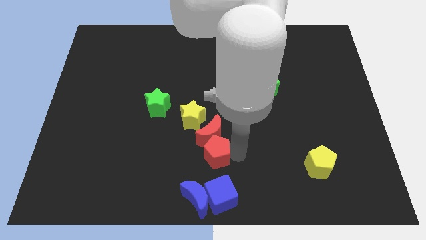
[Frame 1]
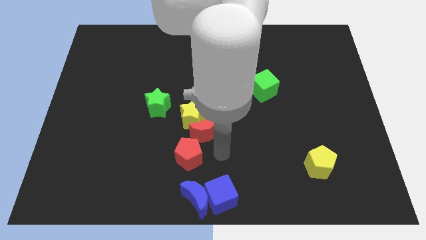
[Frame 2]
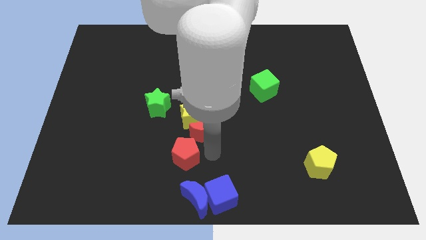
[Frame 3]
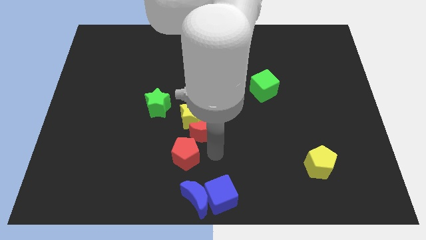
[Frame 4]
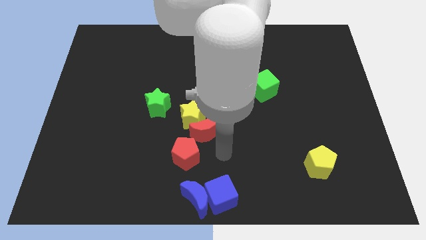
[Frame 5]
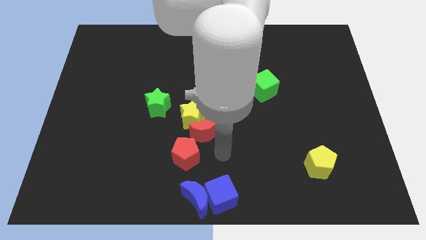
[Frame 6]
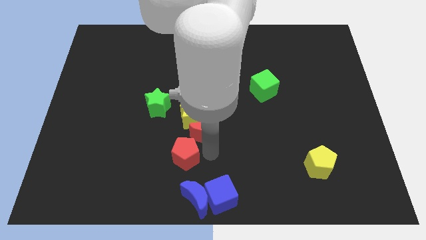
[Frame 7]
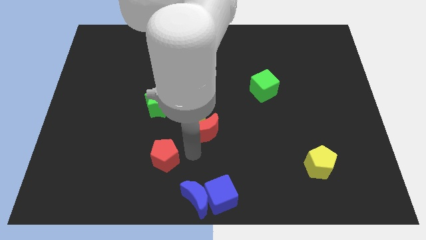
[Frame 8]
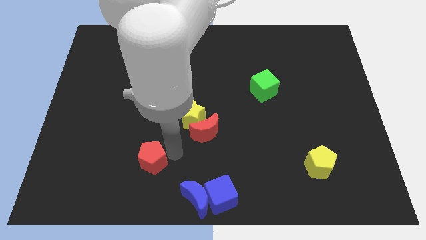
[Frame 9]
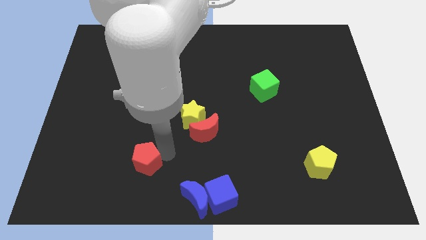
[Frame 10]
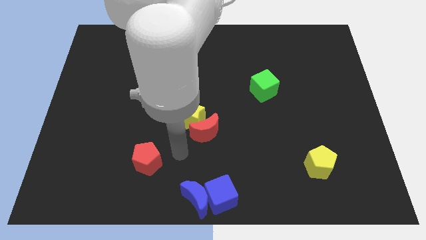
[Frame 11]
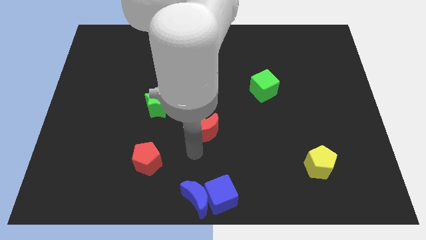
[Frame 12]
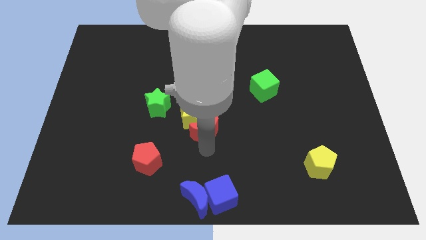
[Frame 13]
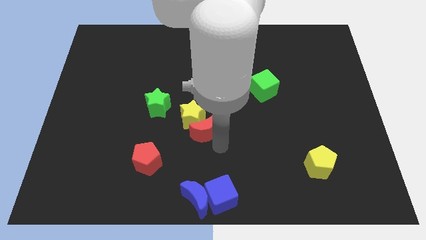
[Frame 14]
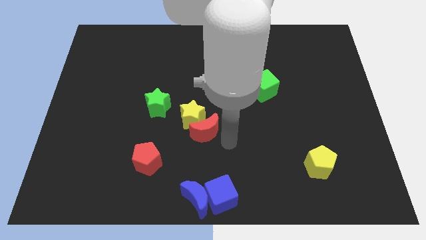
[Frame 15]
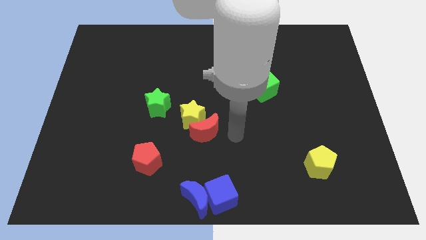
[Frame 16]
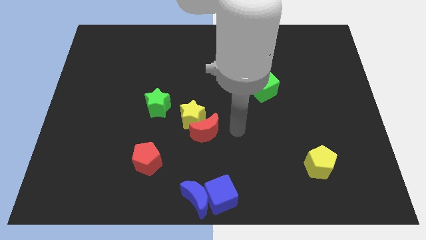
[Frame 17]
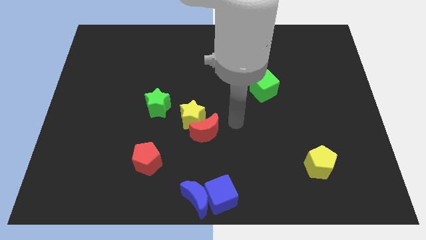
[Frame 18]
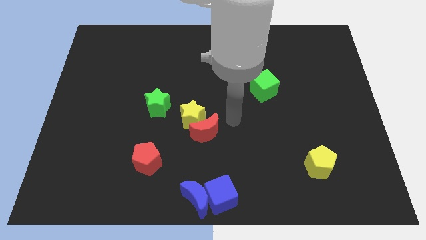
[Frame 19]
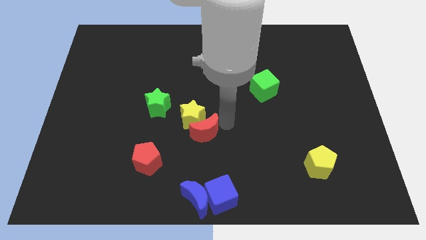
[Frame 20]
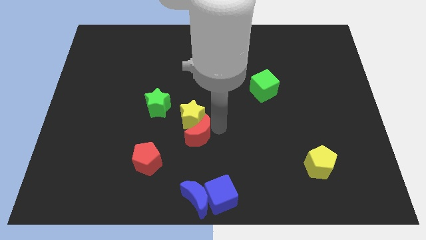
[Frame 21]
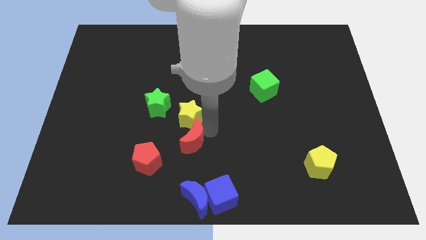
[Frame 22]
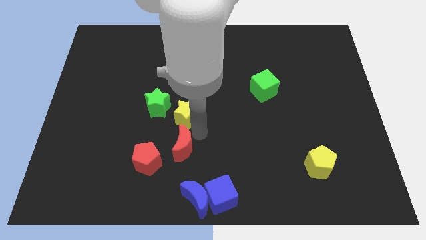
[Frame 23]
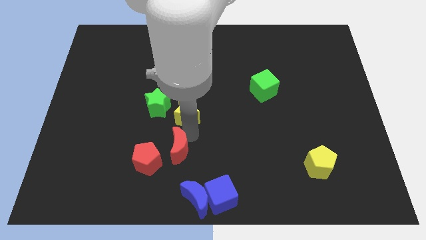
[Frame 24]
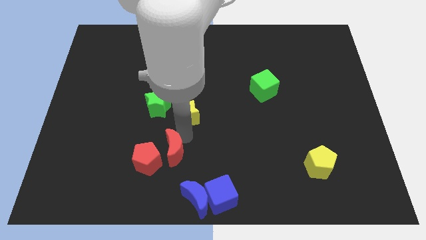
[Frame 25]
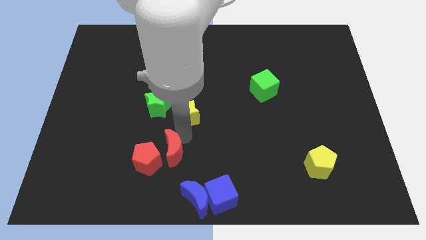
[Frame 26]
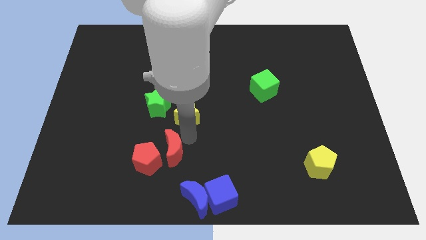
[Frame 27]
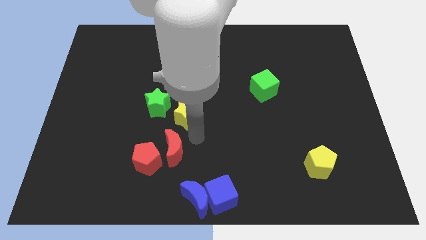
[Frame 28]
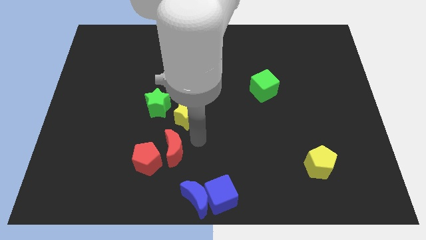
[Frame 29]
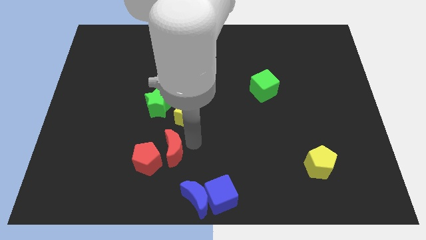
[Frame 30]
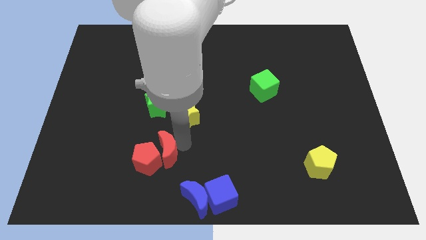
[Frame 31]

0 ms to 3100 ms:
move the group of red blocks

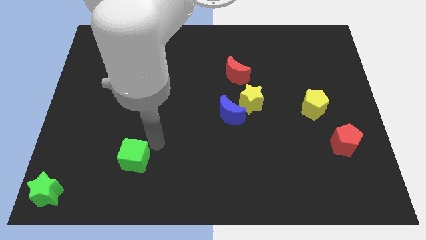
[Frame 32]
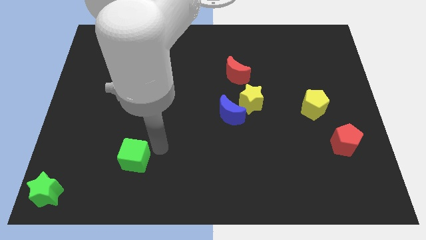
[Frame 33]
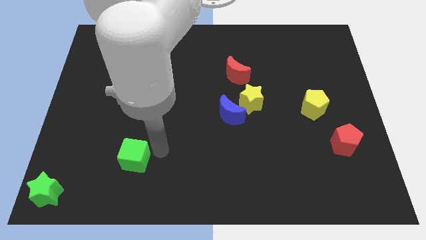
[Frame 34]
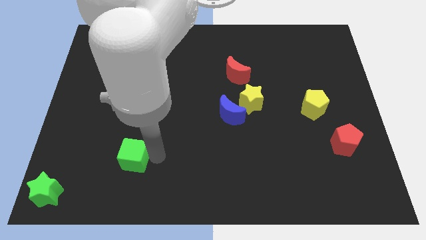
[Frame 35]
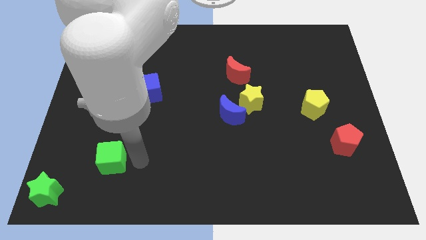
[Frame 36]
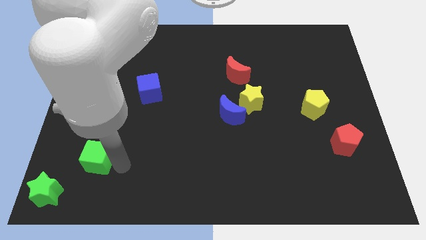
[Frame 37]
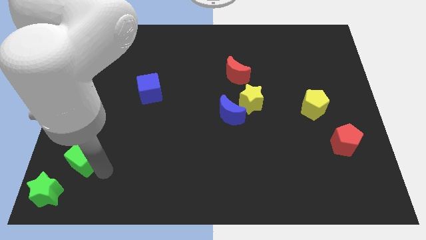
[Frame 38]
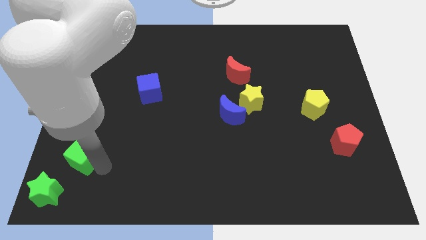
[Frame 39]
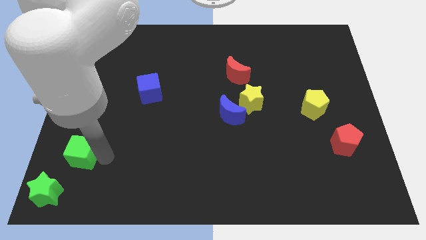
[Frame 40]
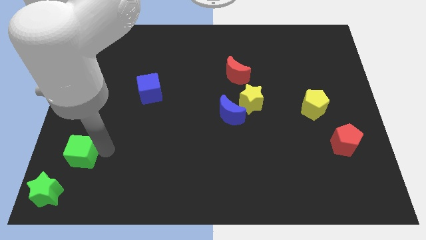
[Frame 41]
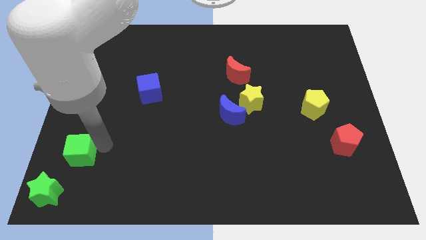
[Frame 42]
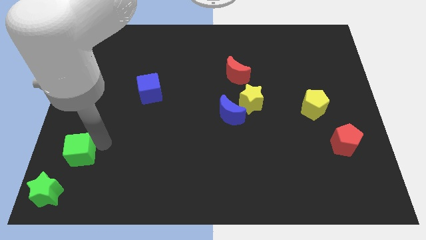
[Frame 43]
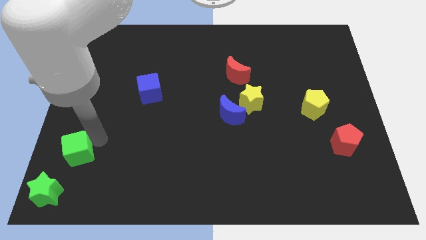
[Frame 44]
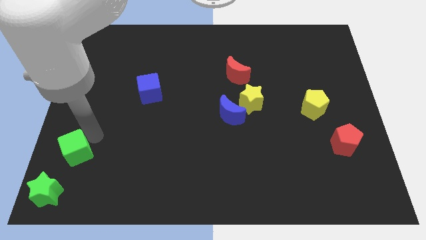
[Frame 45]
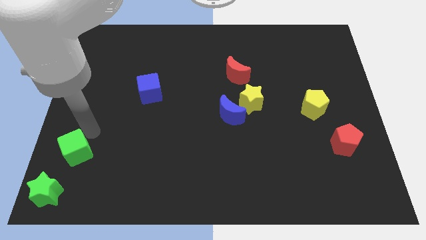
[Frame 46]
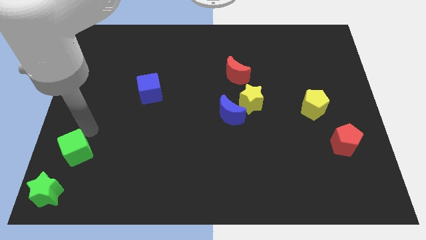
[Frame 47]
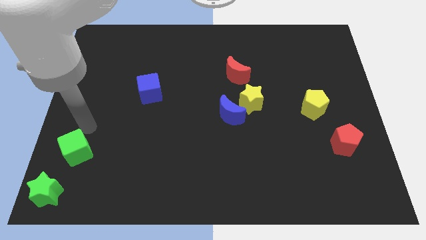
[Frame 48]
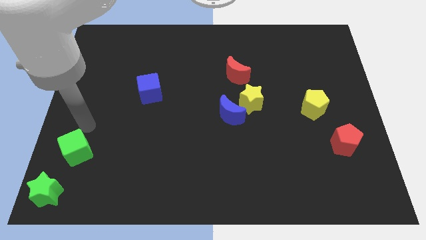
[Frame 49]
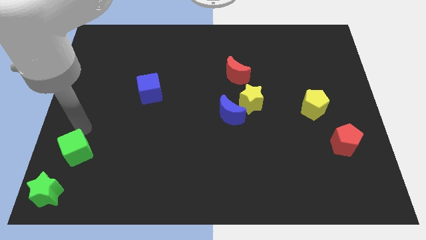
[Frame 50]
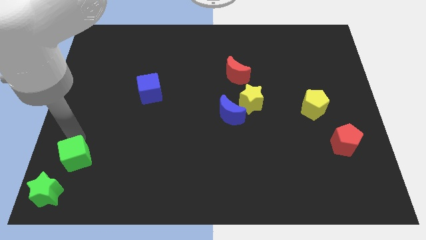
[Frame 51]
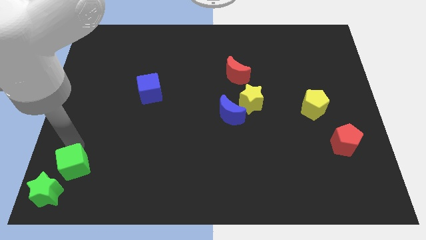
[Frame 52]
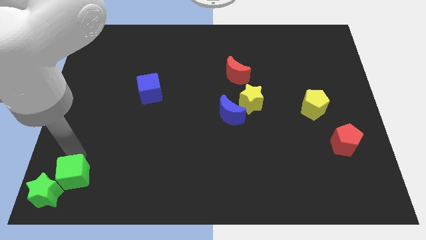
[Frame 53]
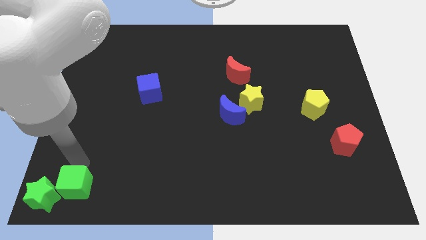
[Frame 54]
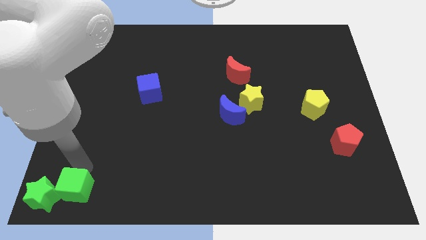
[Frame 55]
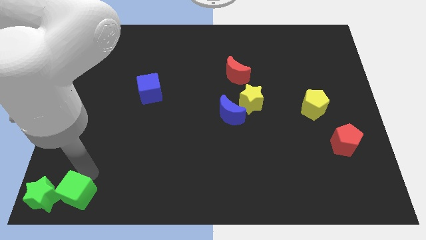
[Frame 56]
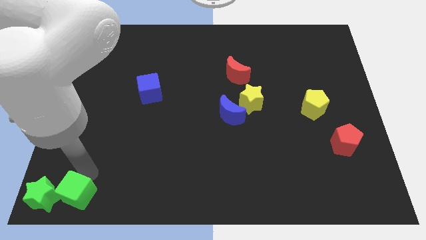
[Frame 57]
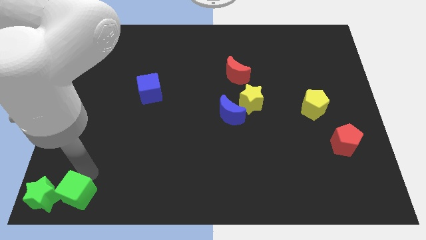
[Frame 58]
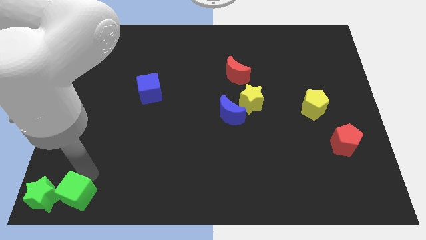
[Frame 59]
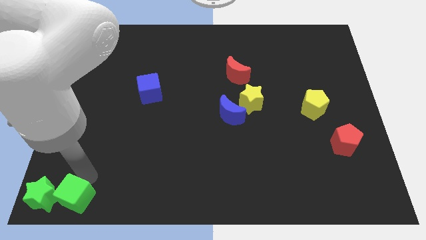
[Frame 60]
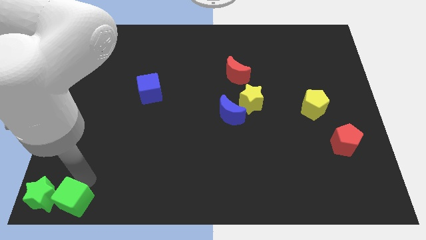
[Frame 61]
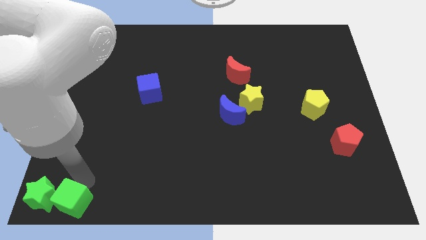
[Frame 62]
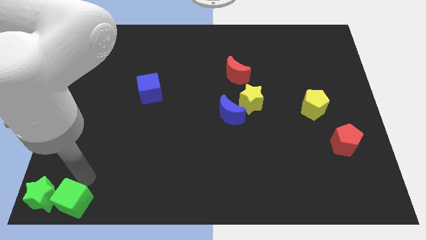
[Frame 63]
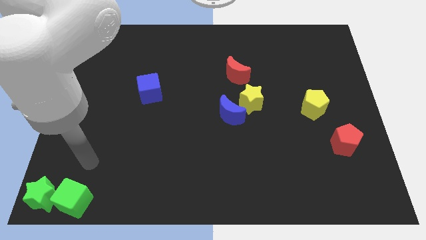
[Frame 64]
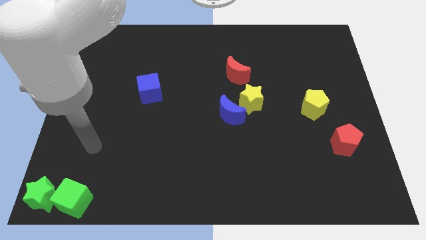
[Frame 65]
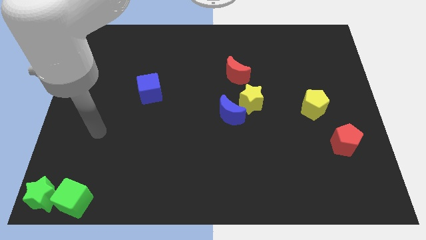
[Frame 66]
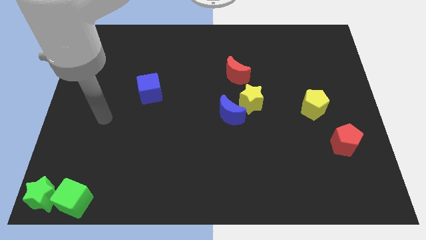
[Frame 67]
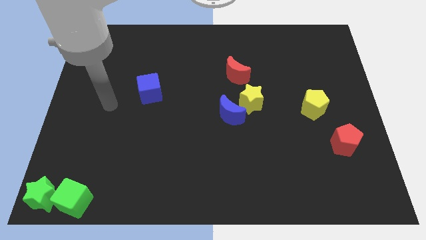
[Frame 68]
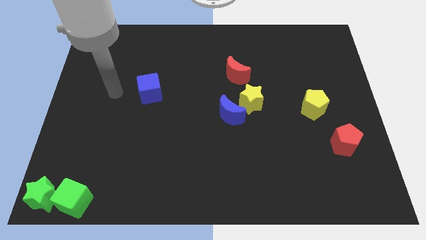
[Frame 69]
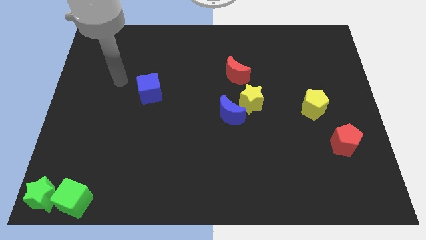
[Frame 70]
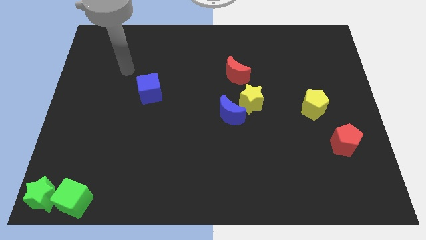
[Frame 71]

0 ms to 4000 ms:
push the green cube to the right of the green star

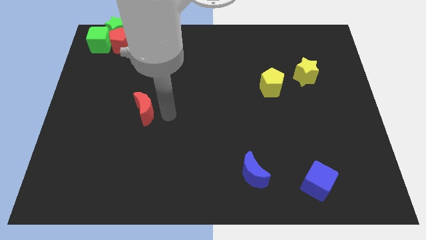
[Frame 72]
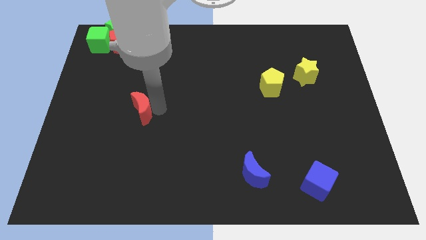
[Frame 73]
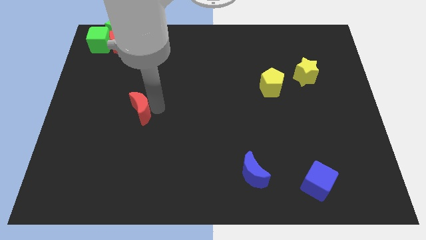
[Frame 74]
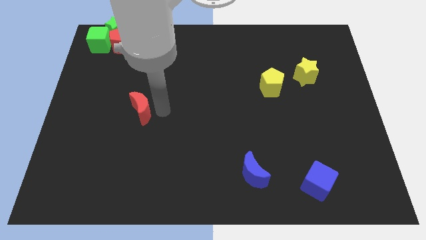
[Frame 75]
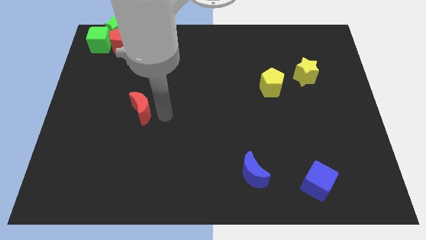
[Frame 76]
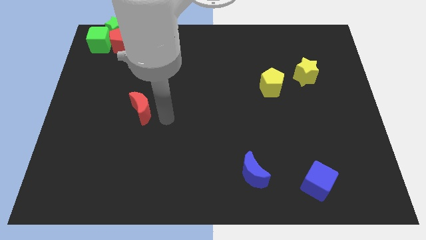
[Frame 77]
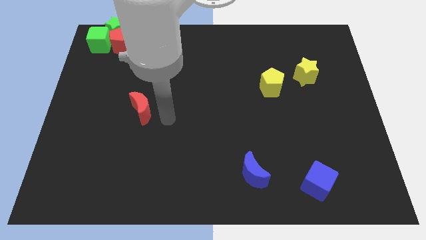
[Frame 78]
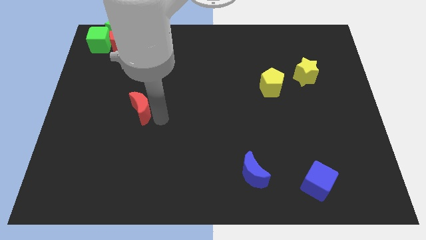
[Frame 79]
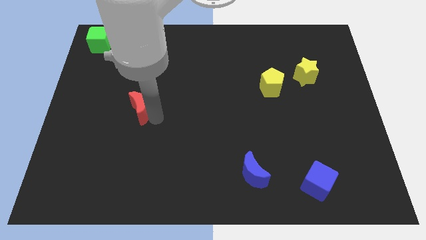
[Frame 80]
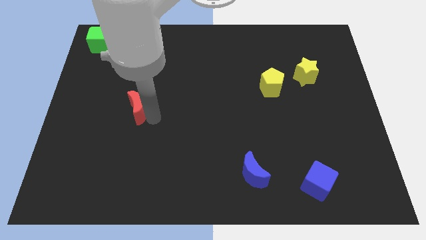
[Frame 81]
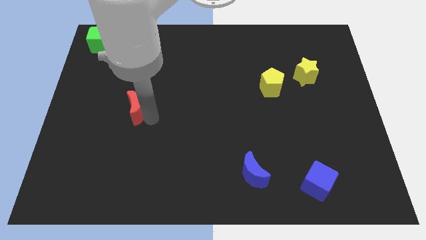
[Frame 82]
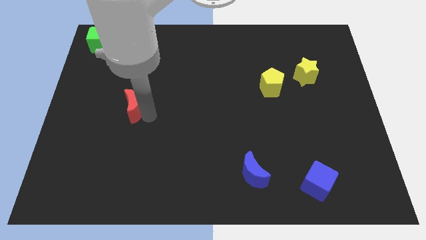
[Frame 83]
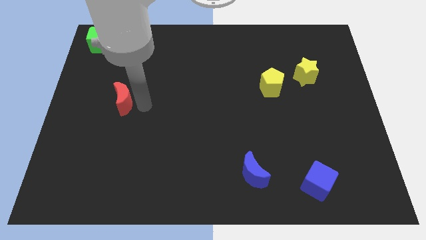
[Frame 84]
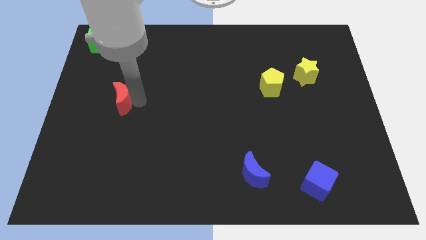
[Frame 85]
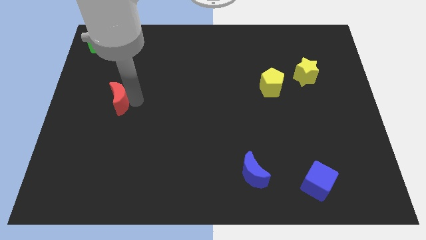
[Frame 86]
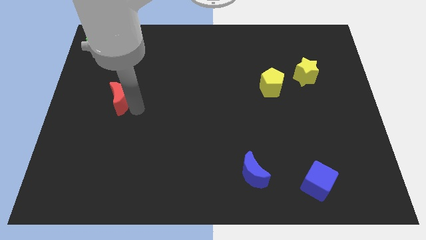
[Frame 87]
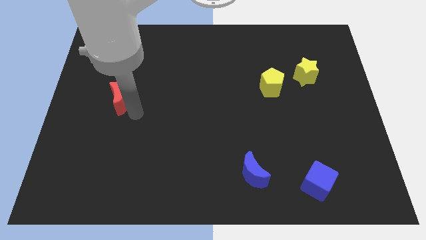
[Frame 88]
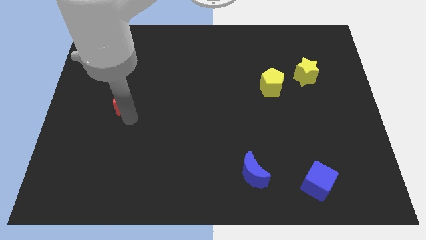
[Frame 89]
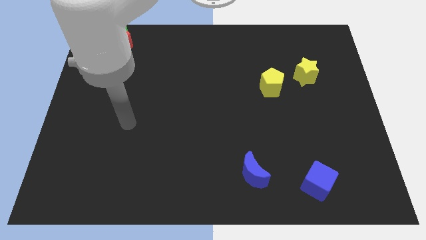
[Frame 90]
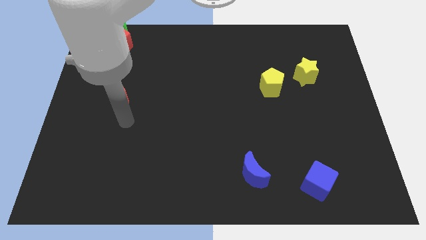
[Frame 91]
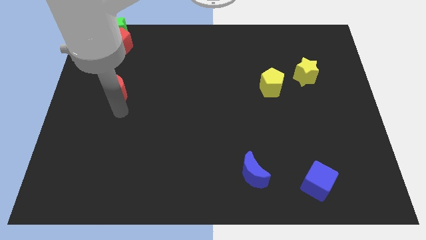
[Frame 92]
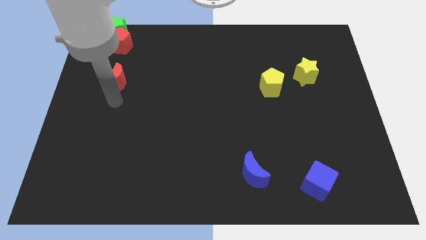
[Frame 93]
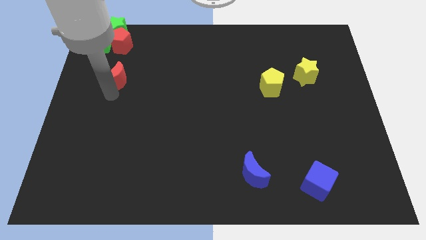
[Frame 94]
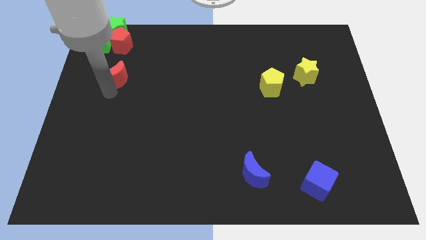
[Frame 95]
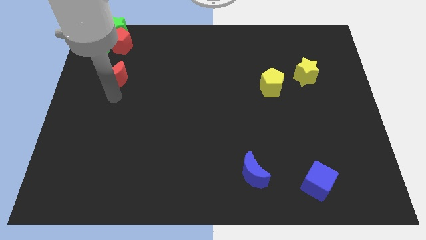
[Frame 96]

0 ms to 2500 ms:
move the red moon towards the top left corner
